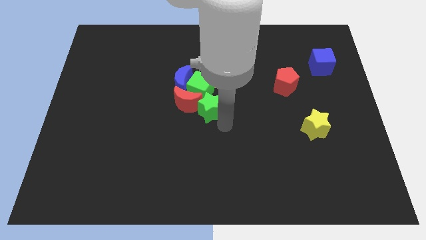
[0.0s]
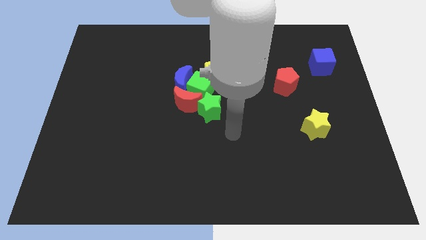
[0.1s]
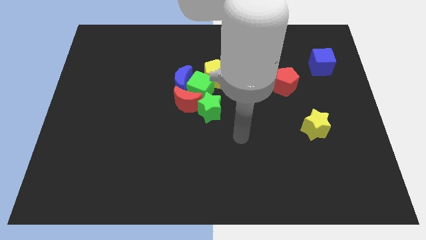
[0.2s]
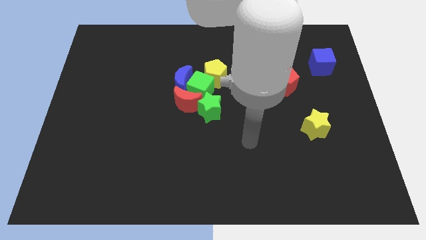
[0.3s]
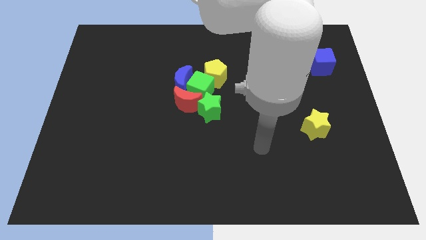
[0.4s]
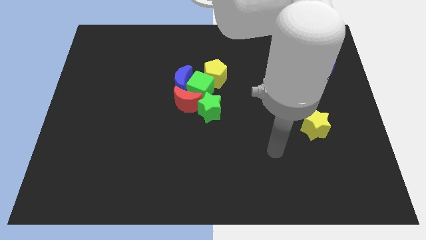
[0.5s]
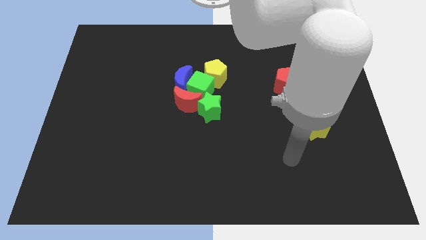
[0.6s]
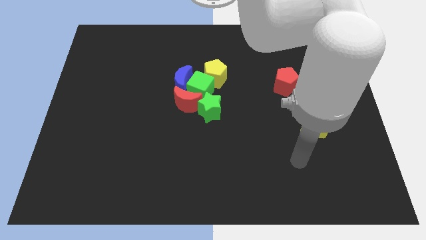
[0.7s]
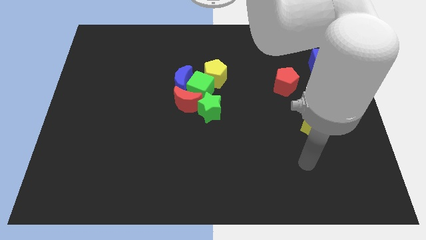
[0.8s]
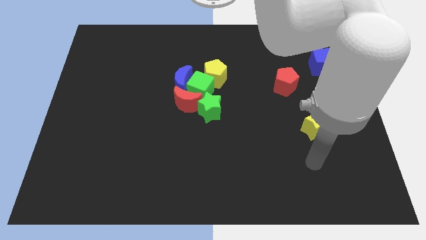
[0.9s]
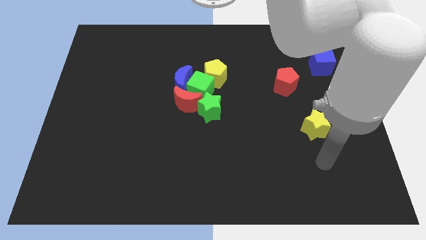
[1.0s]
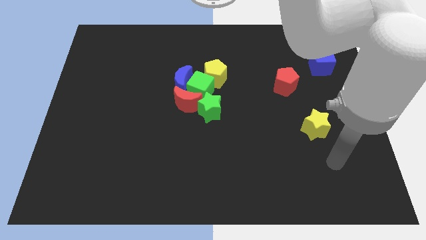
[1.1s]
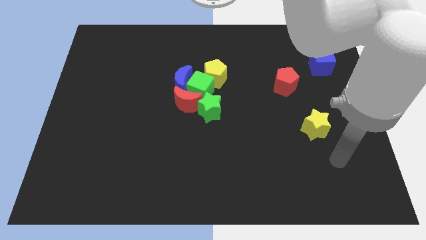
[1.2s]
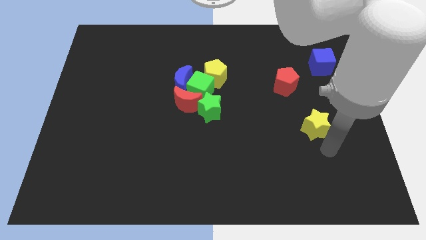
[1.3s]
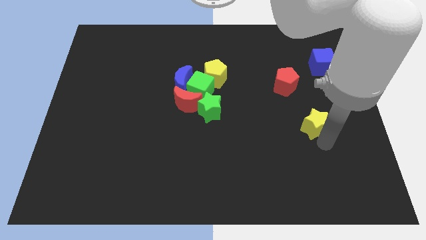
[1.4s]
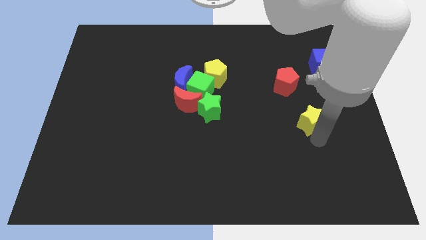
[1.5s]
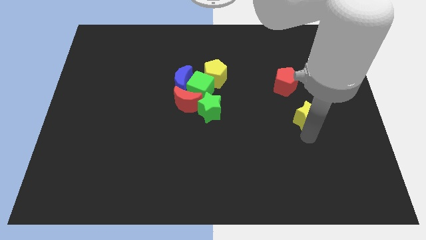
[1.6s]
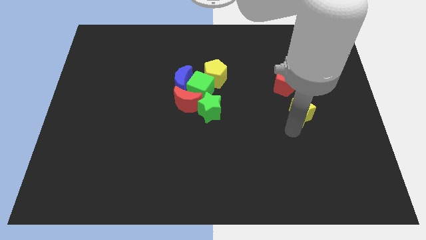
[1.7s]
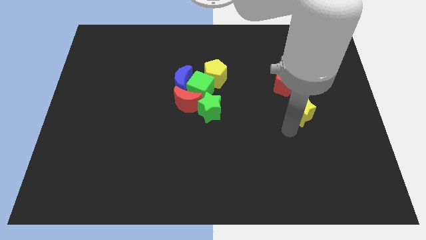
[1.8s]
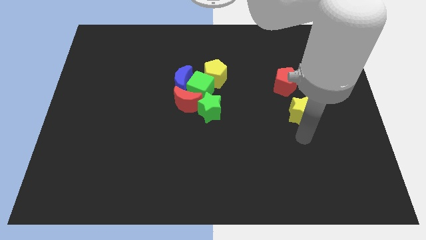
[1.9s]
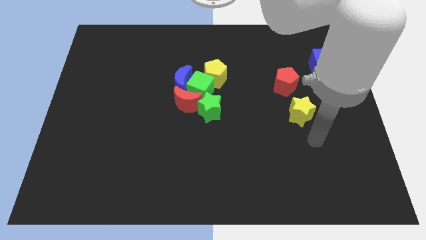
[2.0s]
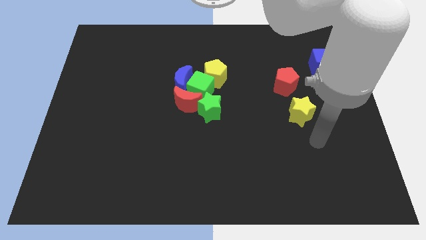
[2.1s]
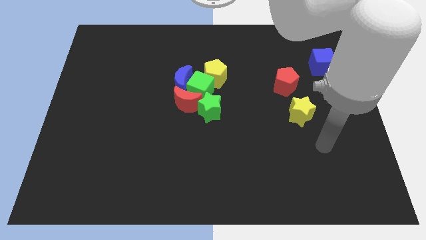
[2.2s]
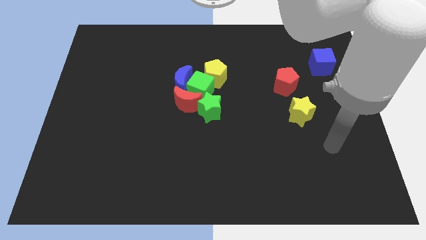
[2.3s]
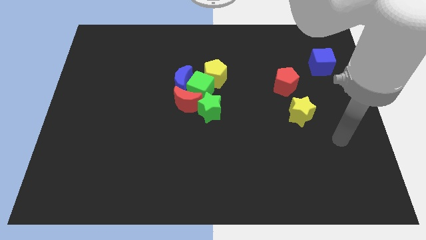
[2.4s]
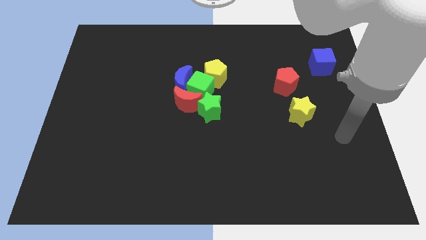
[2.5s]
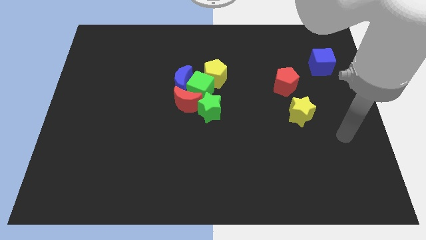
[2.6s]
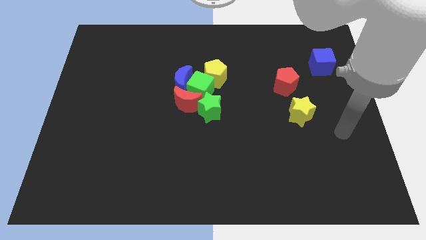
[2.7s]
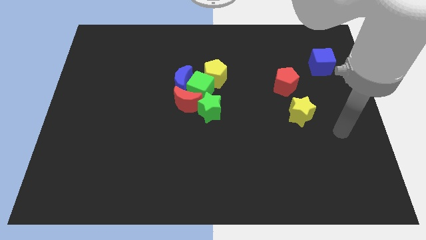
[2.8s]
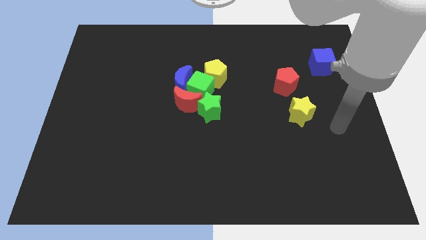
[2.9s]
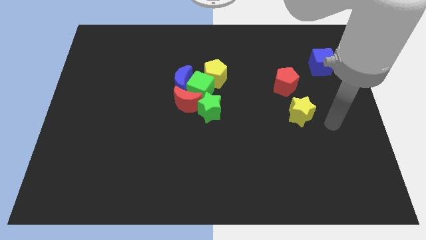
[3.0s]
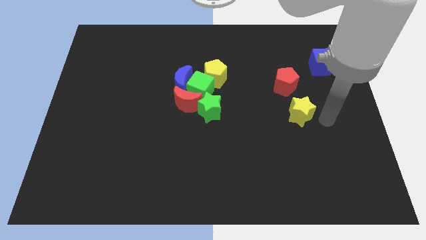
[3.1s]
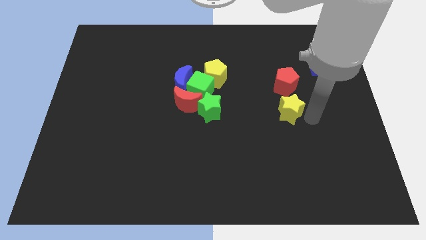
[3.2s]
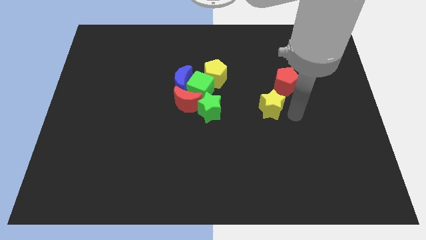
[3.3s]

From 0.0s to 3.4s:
place the yellow star parallel to the green star

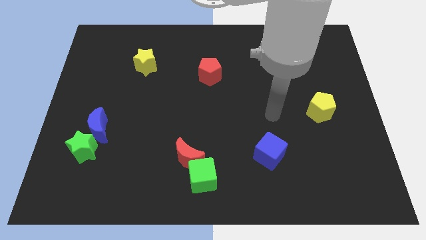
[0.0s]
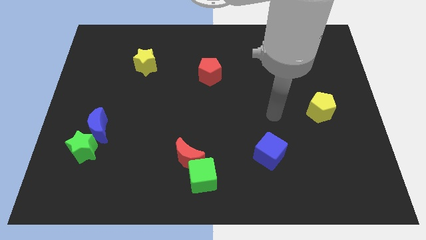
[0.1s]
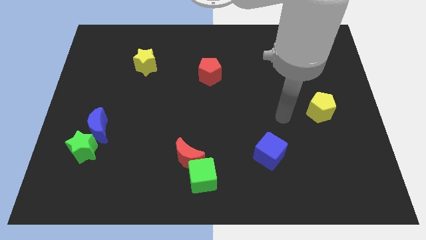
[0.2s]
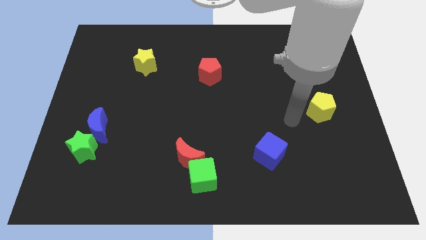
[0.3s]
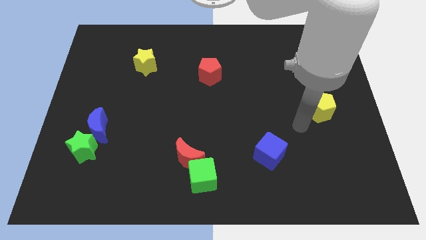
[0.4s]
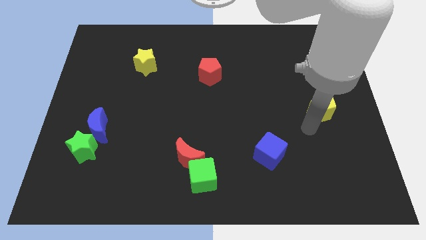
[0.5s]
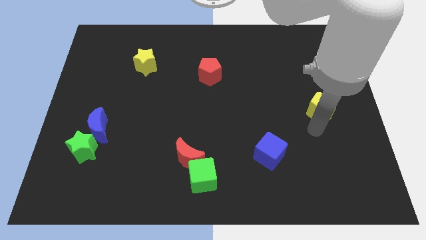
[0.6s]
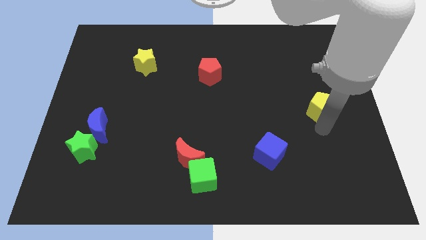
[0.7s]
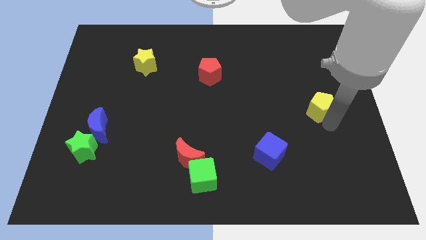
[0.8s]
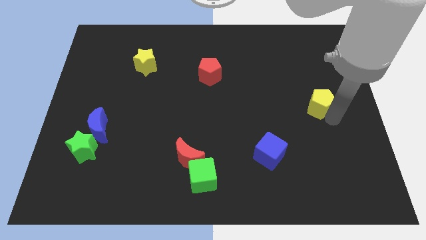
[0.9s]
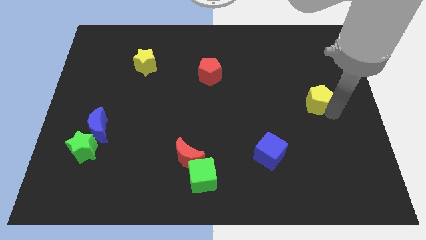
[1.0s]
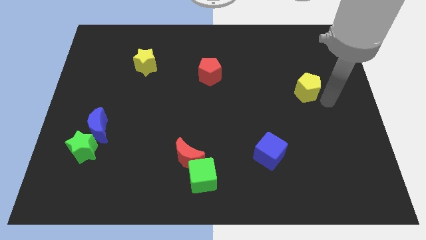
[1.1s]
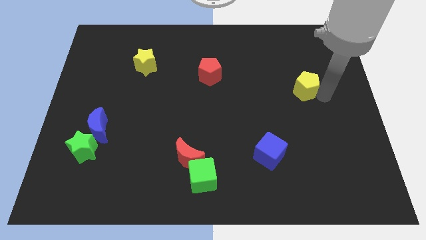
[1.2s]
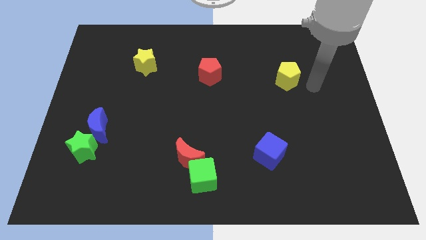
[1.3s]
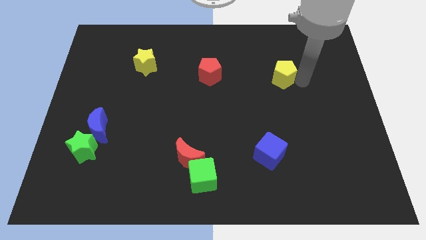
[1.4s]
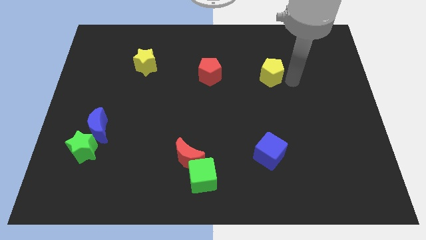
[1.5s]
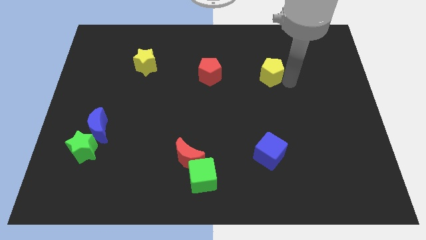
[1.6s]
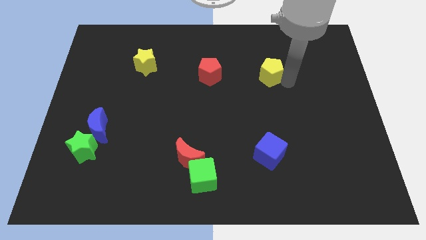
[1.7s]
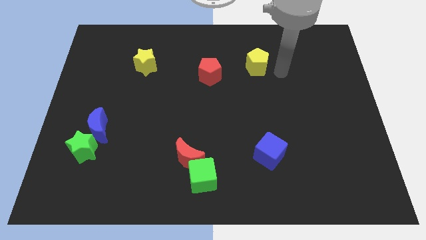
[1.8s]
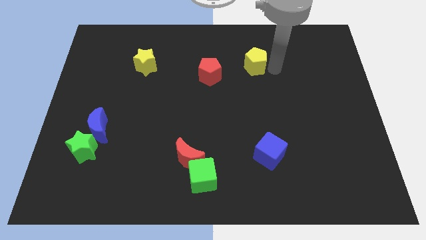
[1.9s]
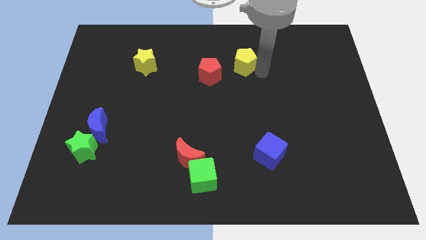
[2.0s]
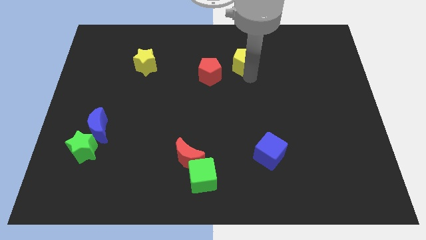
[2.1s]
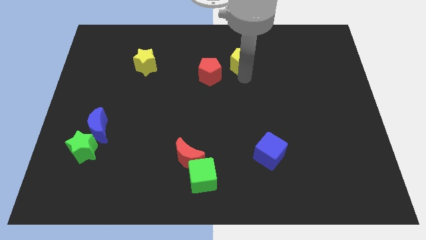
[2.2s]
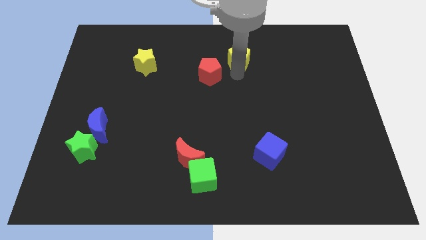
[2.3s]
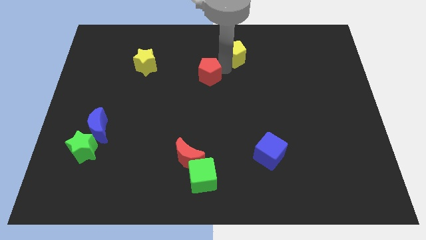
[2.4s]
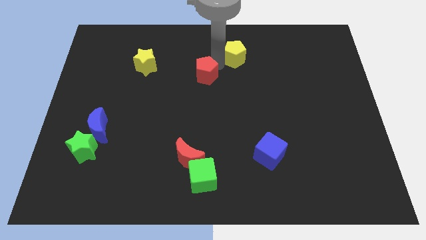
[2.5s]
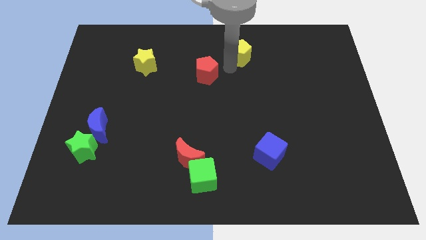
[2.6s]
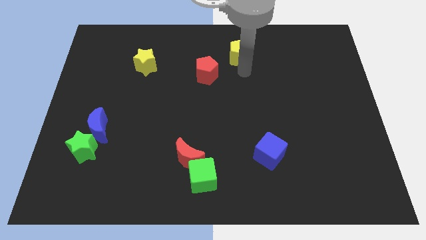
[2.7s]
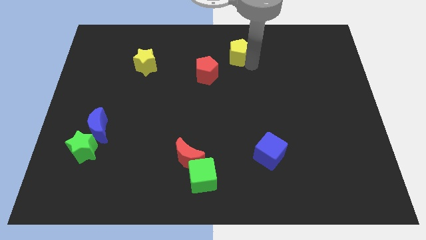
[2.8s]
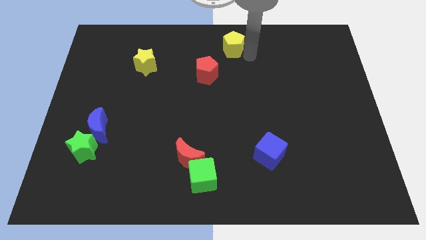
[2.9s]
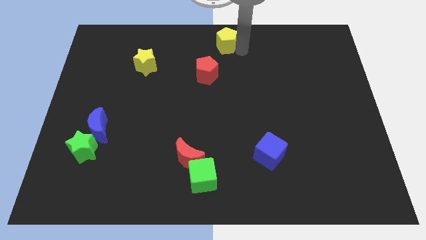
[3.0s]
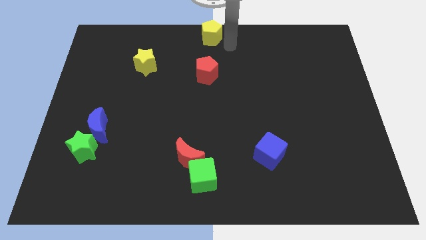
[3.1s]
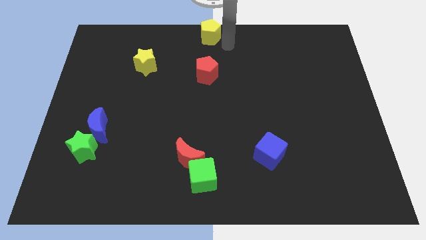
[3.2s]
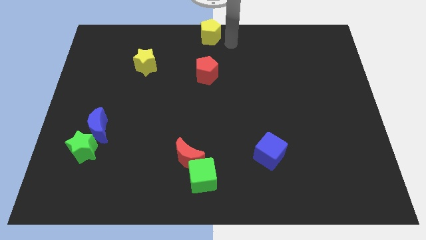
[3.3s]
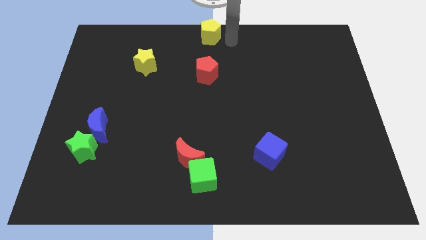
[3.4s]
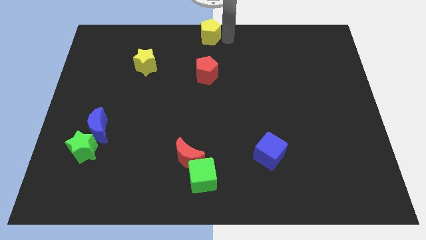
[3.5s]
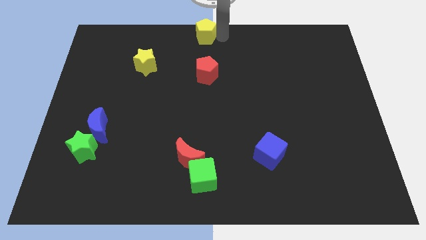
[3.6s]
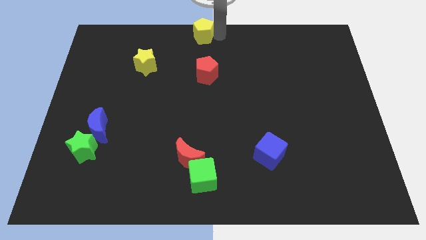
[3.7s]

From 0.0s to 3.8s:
move the yellow pentagon vertically above the red pentagon

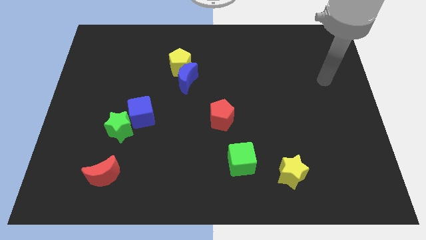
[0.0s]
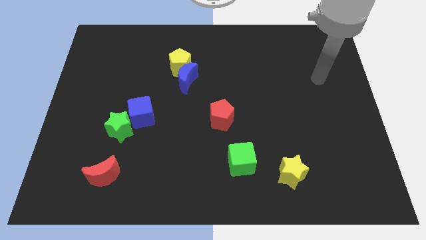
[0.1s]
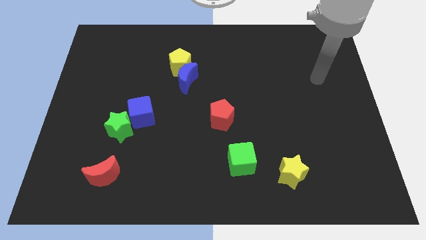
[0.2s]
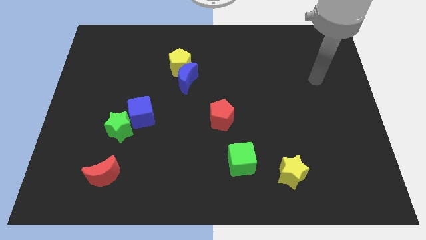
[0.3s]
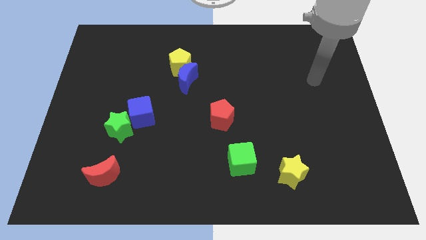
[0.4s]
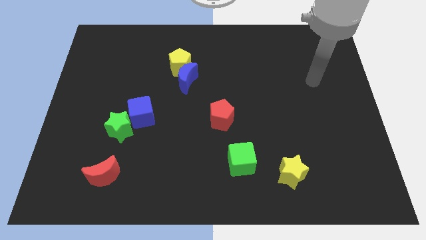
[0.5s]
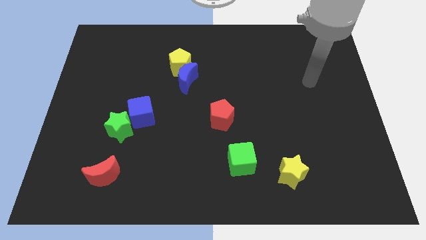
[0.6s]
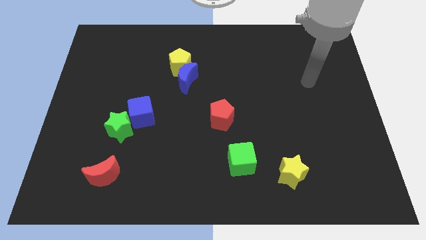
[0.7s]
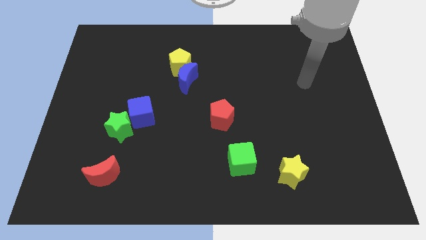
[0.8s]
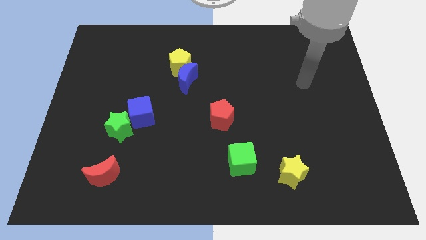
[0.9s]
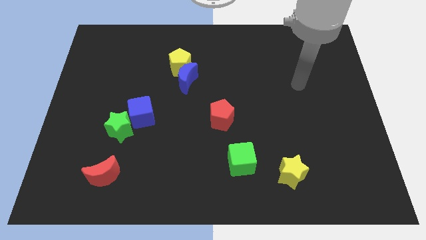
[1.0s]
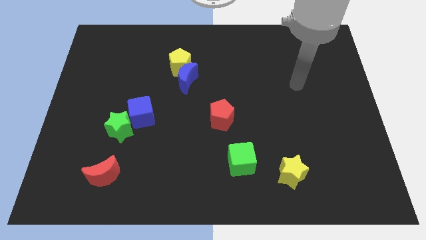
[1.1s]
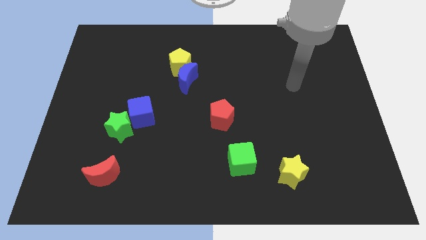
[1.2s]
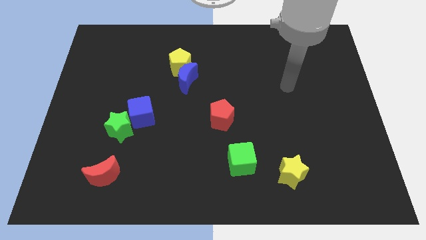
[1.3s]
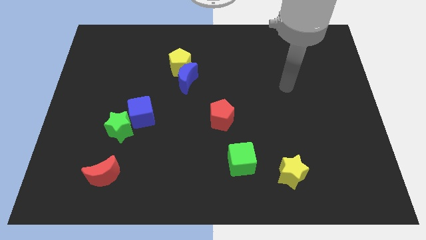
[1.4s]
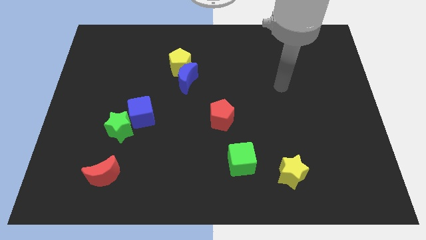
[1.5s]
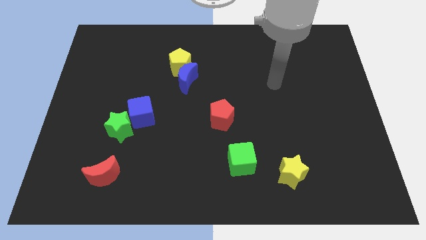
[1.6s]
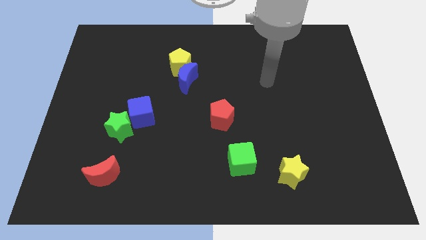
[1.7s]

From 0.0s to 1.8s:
move the arm towards the red pentagon
